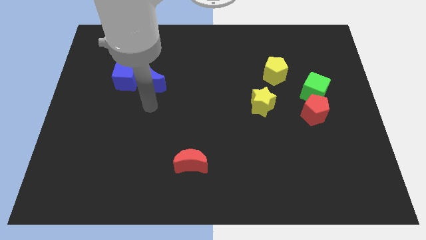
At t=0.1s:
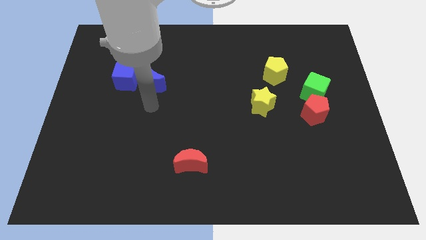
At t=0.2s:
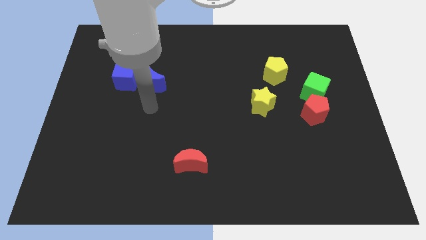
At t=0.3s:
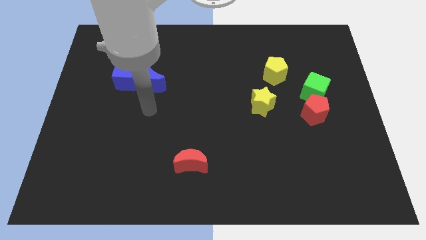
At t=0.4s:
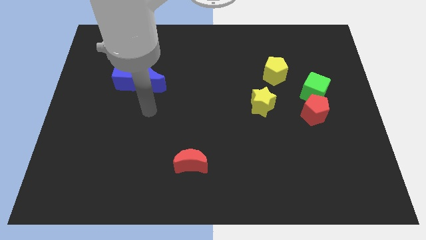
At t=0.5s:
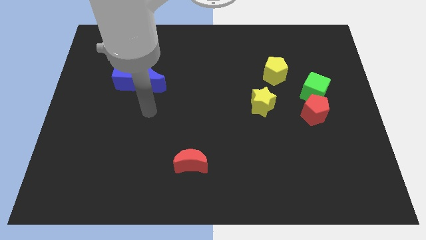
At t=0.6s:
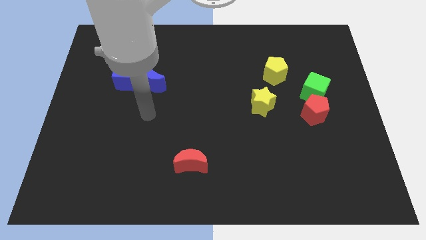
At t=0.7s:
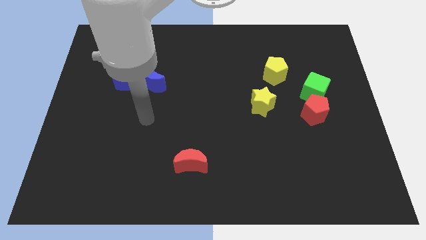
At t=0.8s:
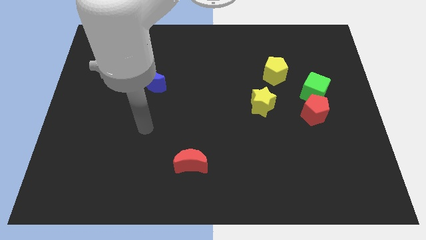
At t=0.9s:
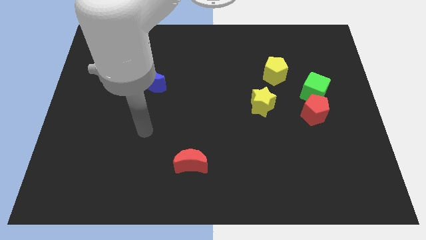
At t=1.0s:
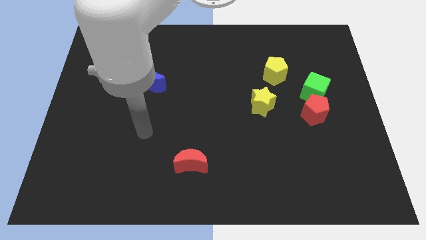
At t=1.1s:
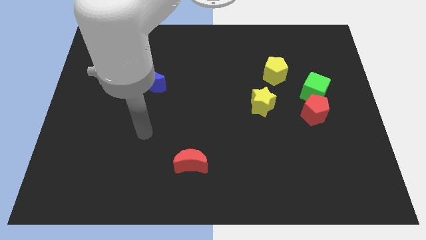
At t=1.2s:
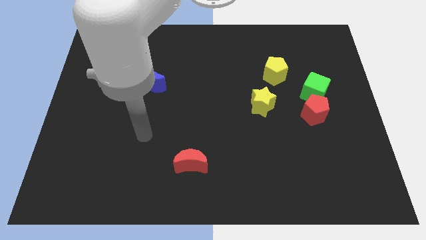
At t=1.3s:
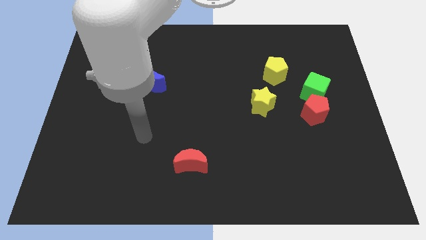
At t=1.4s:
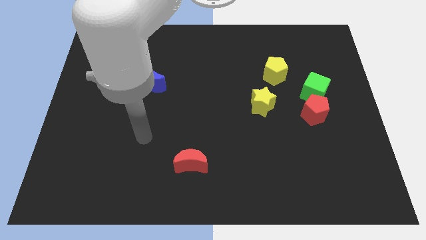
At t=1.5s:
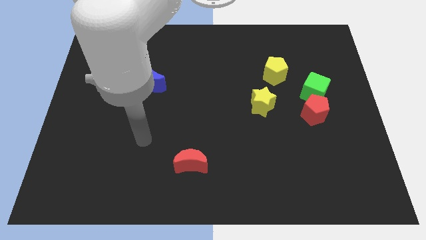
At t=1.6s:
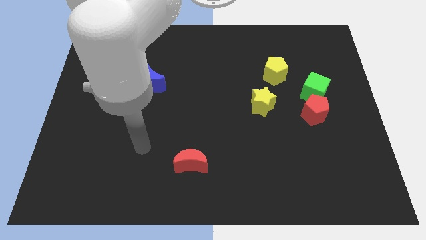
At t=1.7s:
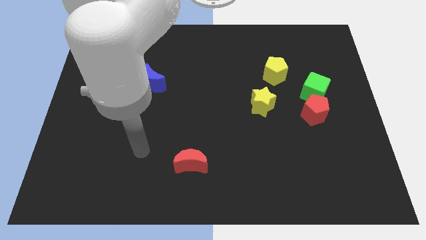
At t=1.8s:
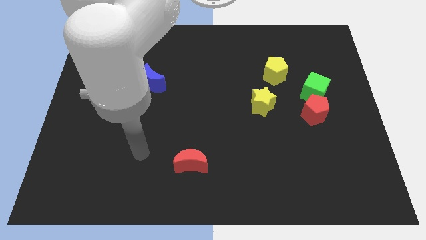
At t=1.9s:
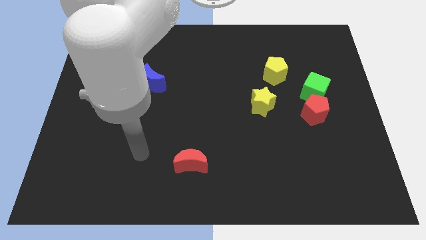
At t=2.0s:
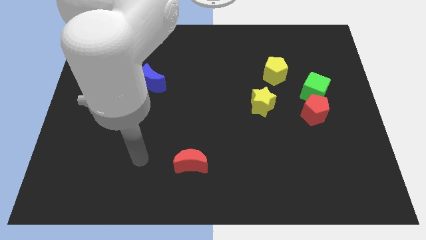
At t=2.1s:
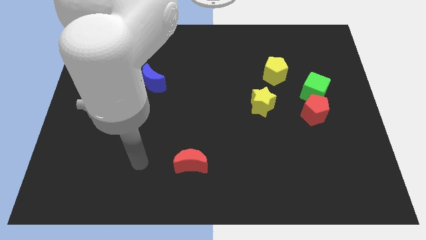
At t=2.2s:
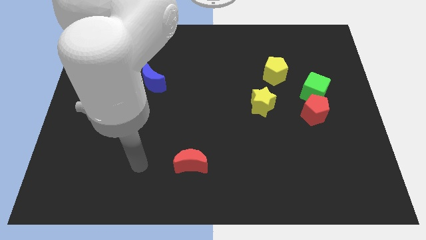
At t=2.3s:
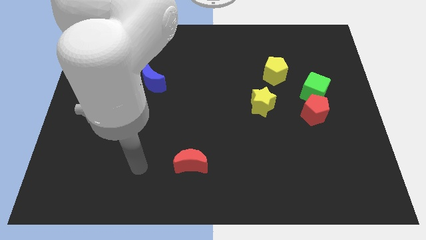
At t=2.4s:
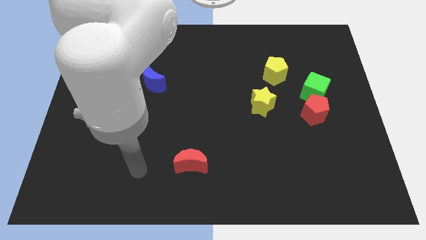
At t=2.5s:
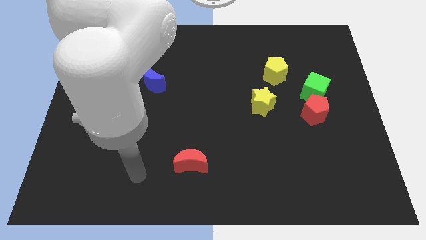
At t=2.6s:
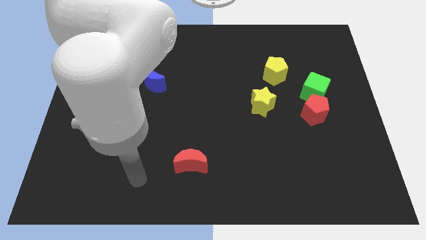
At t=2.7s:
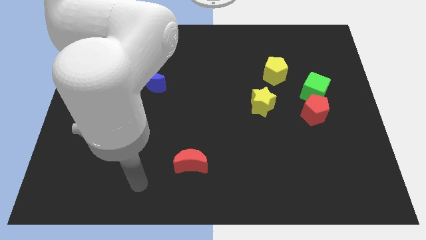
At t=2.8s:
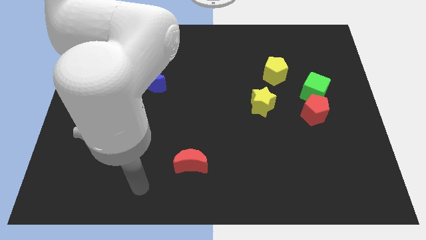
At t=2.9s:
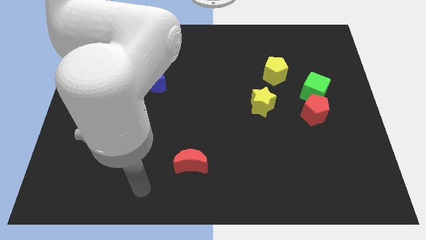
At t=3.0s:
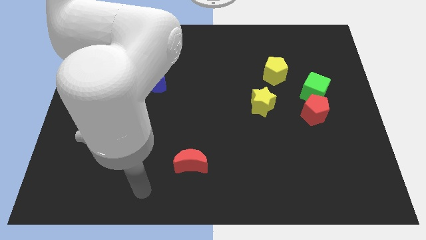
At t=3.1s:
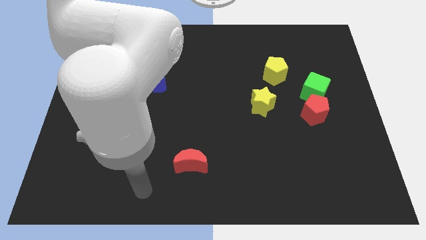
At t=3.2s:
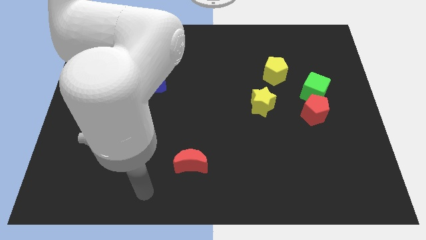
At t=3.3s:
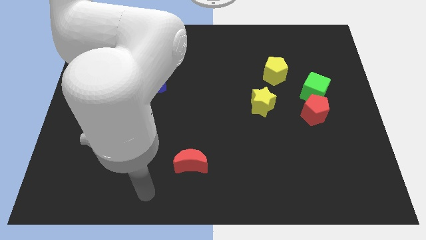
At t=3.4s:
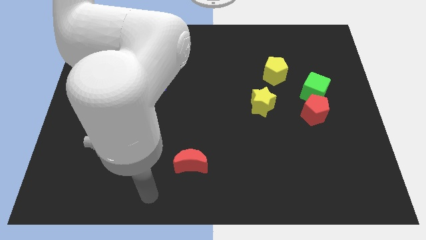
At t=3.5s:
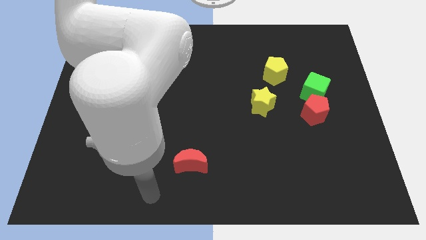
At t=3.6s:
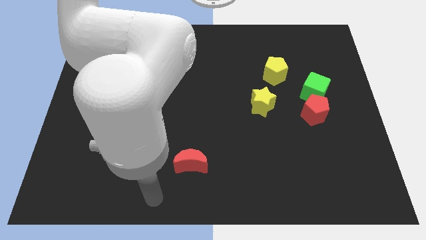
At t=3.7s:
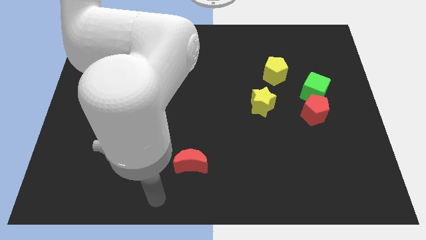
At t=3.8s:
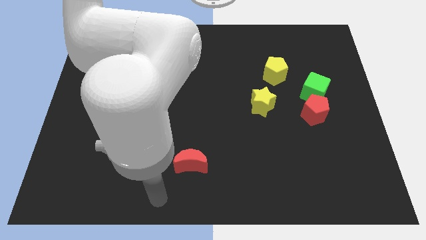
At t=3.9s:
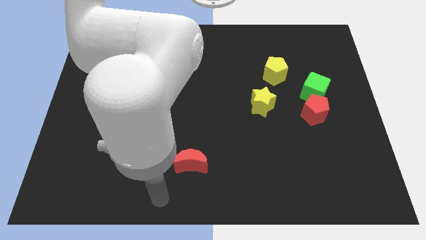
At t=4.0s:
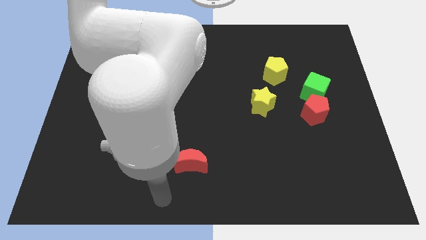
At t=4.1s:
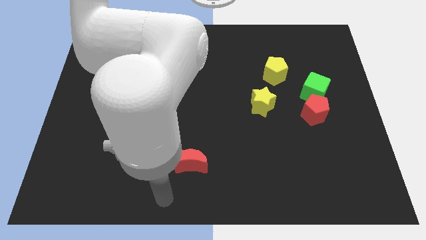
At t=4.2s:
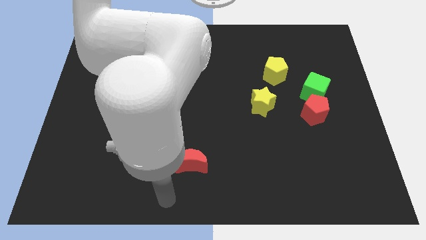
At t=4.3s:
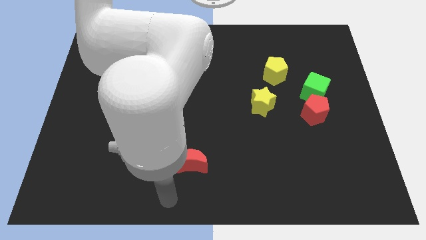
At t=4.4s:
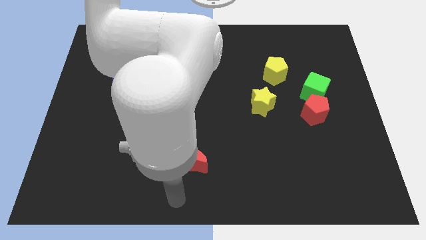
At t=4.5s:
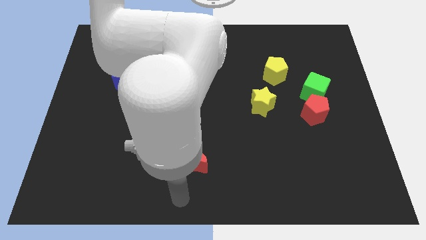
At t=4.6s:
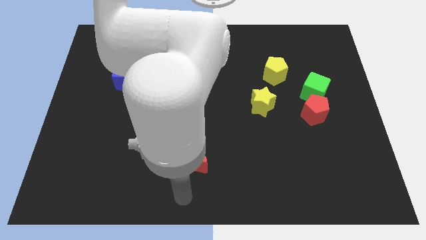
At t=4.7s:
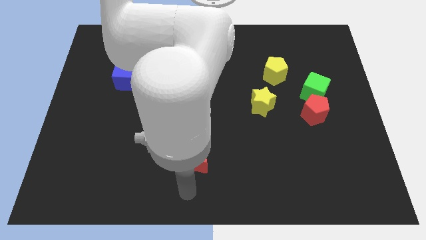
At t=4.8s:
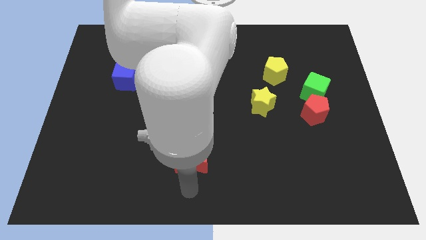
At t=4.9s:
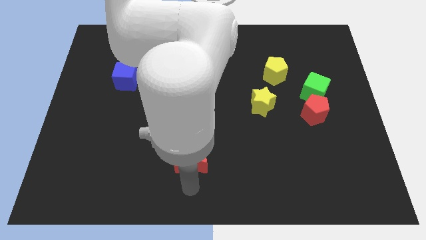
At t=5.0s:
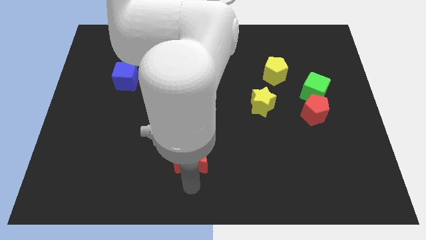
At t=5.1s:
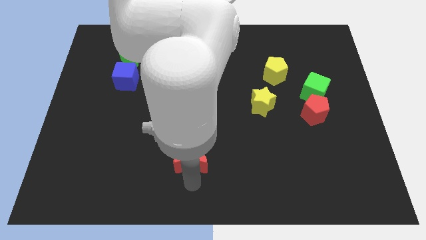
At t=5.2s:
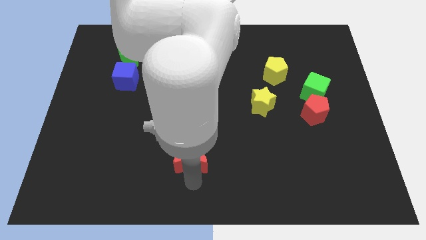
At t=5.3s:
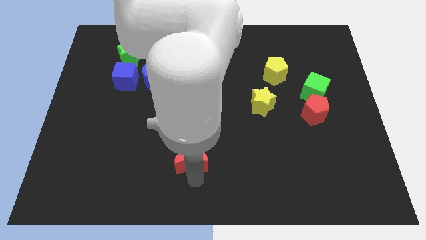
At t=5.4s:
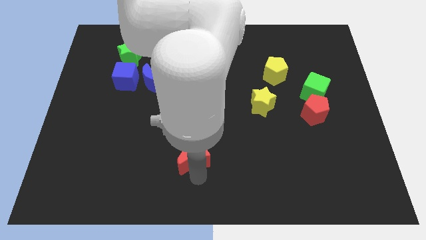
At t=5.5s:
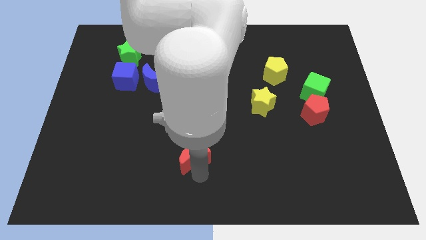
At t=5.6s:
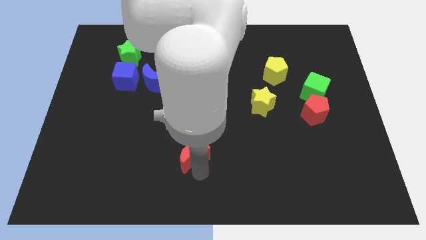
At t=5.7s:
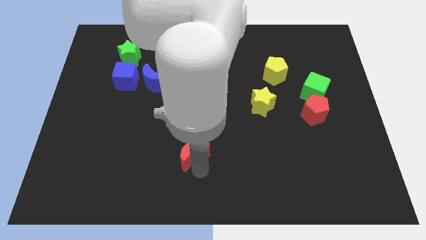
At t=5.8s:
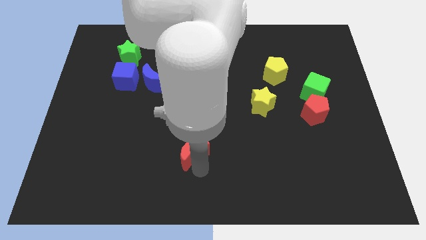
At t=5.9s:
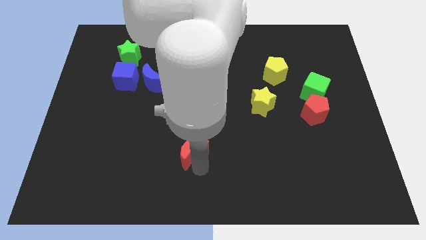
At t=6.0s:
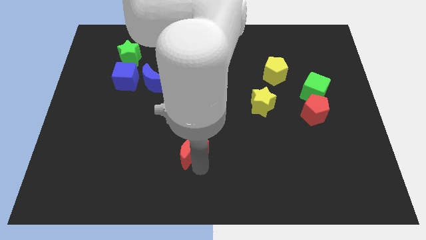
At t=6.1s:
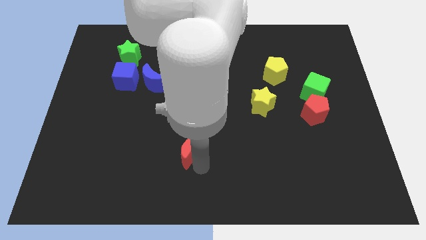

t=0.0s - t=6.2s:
go near red moon

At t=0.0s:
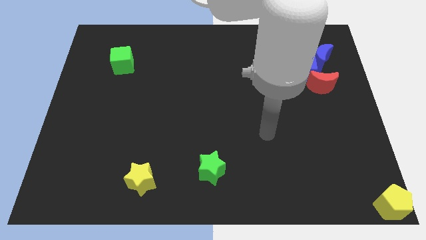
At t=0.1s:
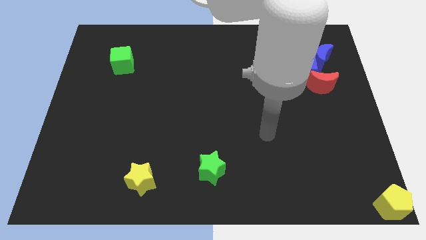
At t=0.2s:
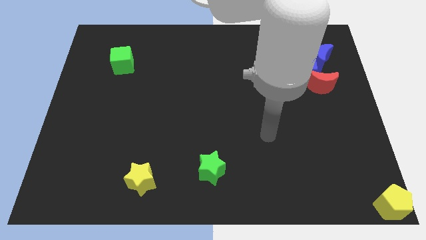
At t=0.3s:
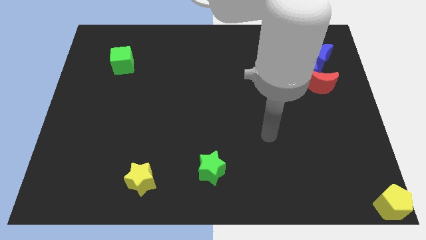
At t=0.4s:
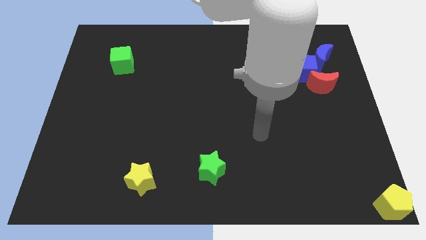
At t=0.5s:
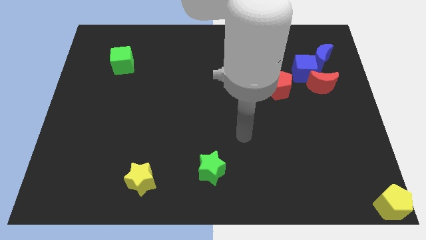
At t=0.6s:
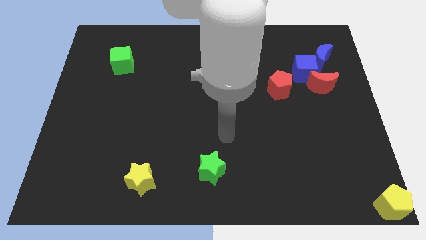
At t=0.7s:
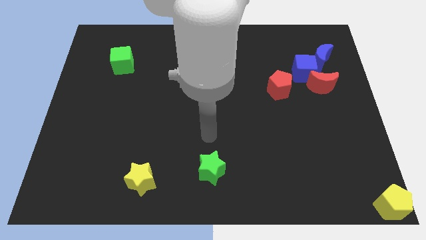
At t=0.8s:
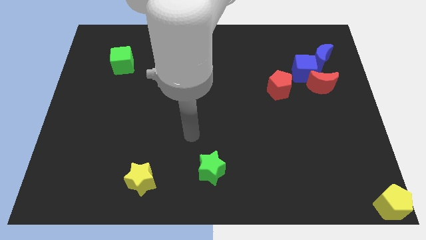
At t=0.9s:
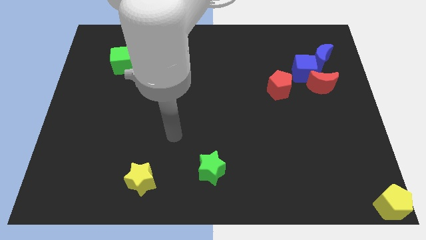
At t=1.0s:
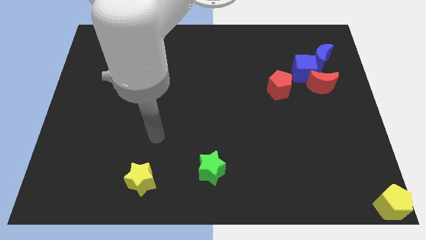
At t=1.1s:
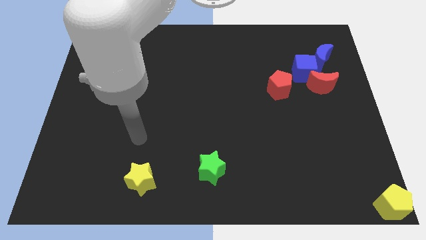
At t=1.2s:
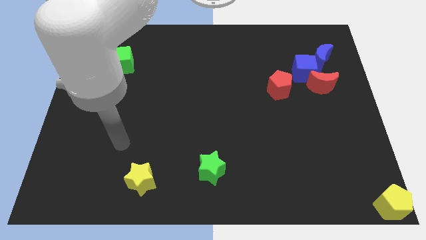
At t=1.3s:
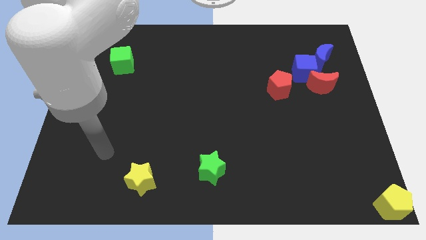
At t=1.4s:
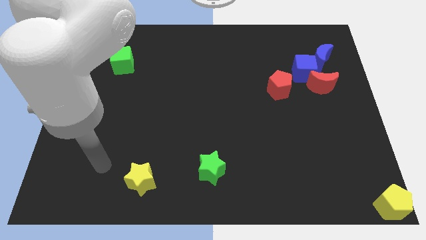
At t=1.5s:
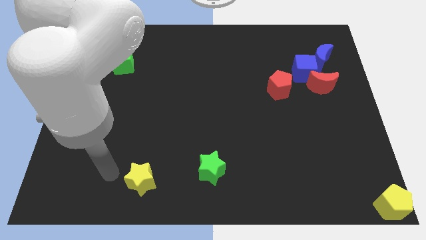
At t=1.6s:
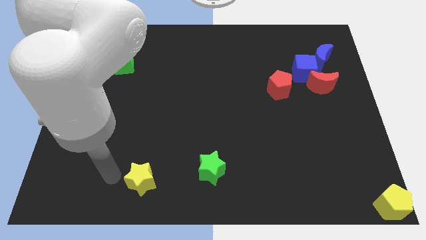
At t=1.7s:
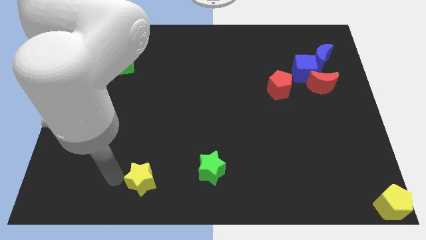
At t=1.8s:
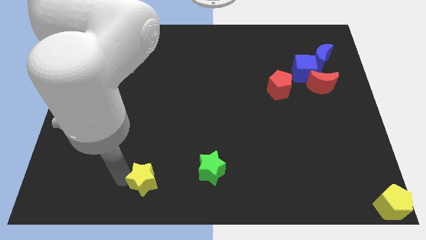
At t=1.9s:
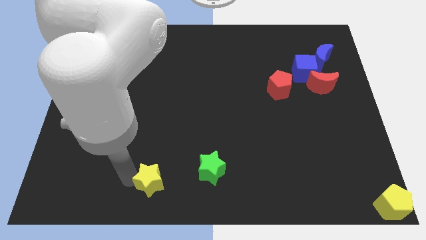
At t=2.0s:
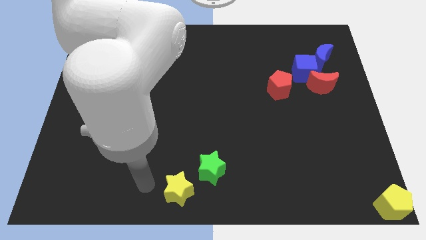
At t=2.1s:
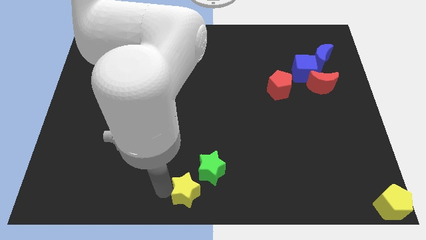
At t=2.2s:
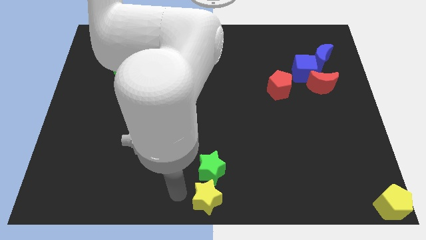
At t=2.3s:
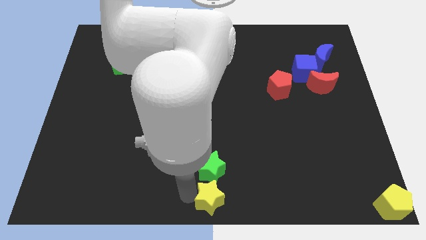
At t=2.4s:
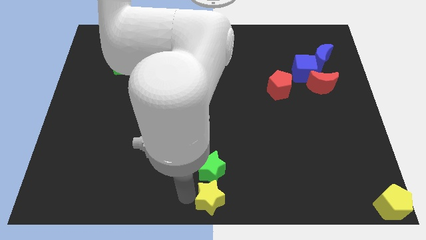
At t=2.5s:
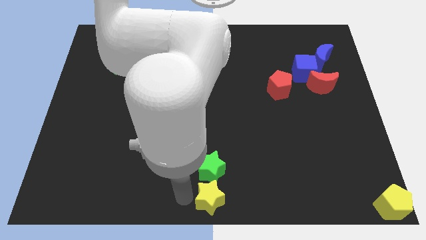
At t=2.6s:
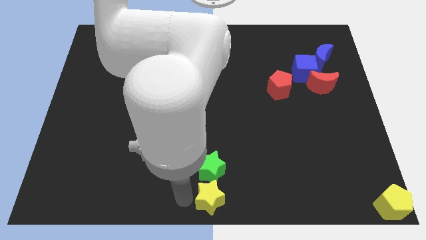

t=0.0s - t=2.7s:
place the yellow star at the bottom center of the board
